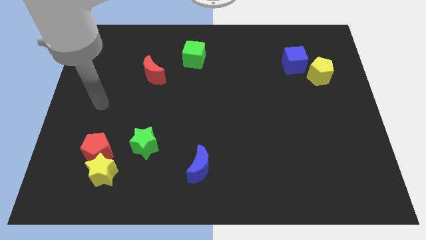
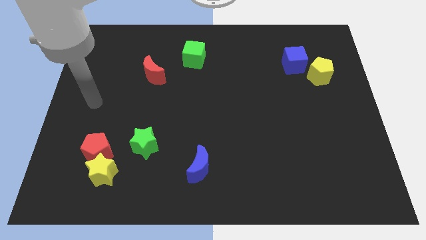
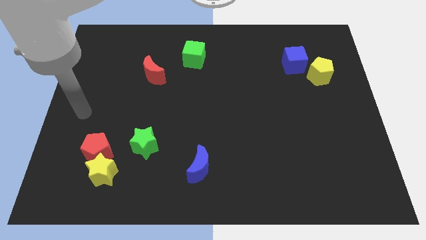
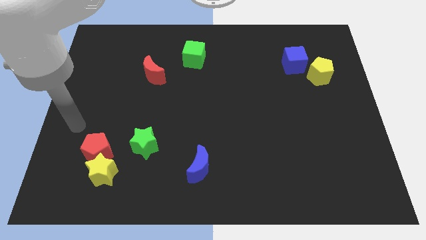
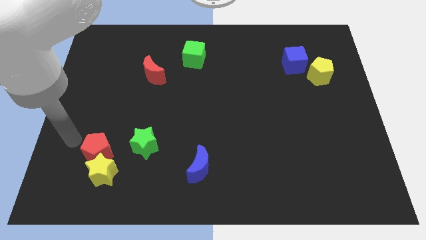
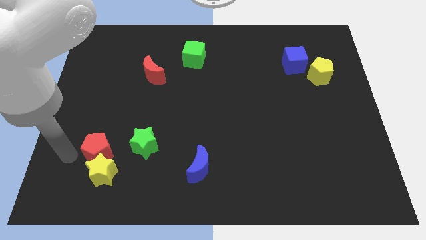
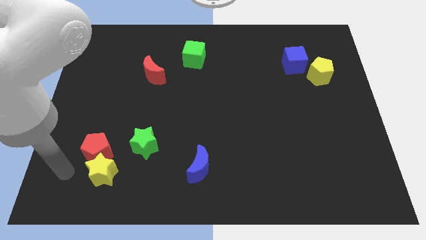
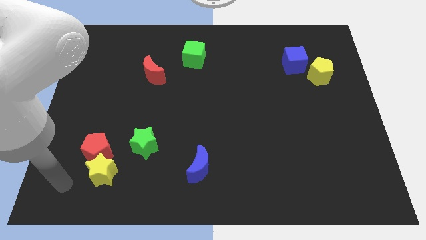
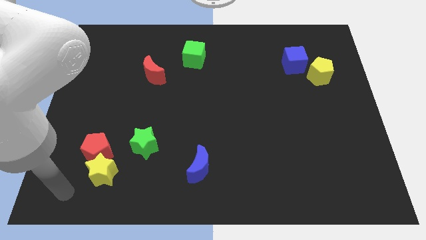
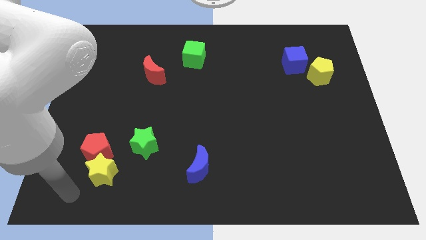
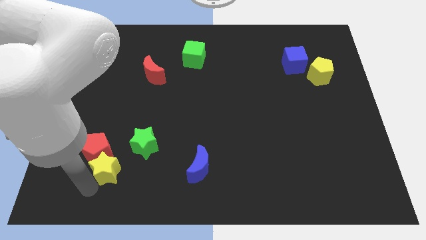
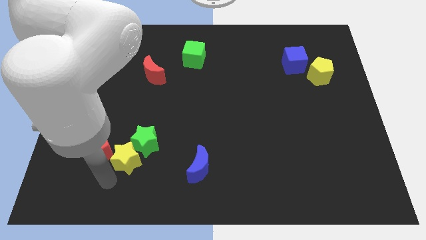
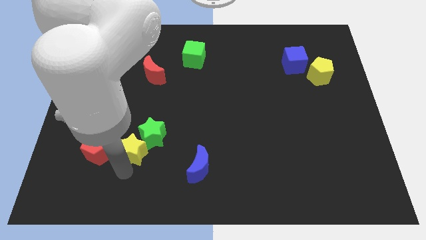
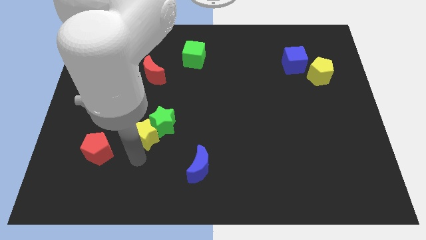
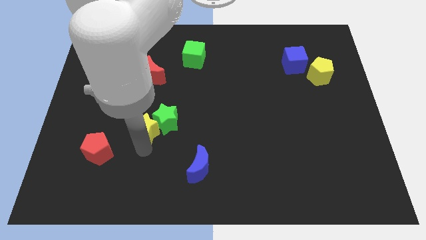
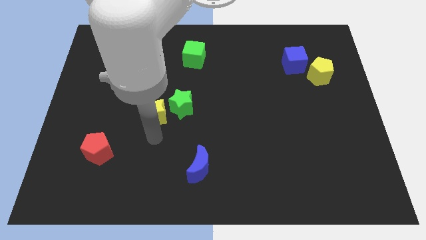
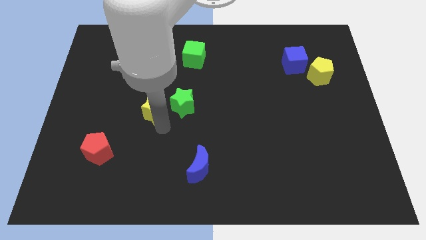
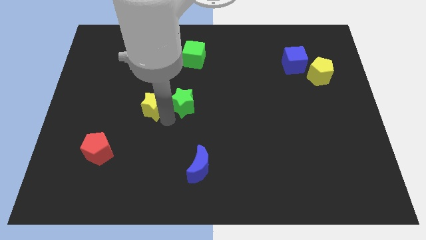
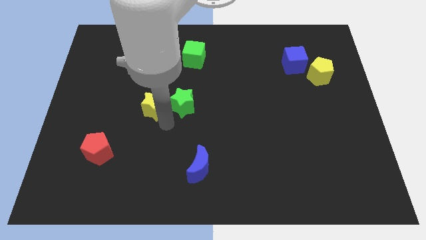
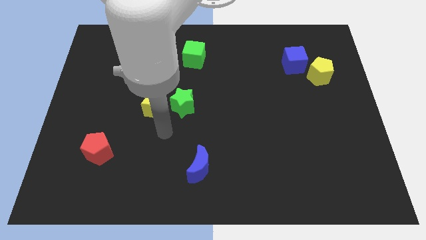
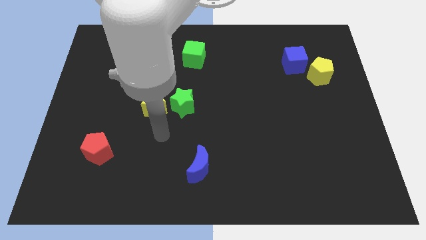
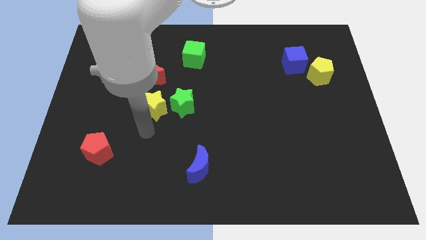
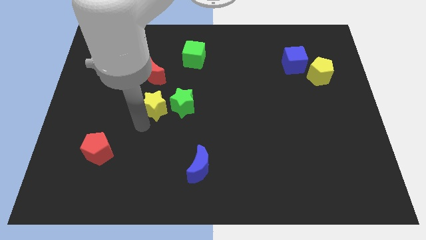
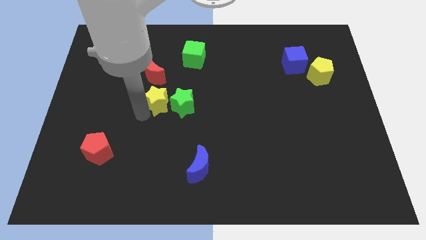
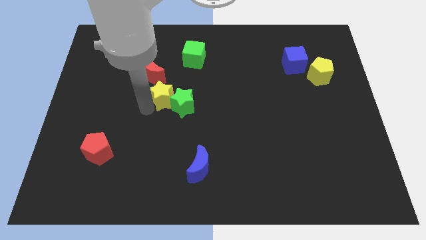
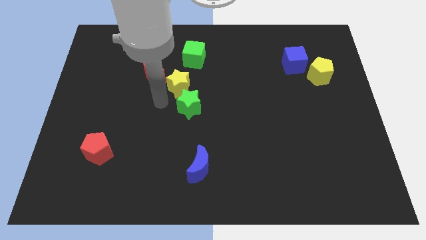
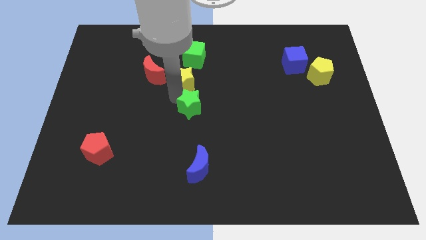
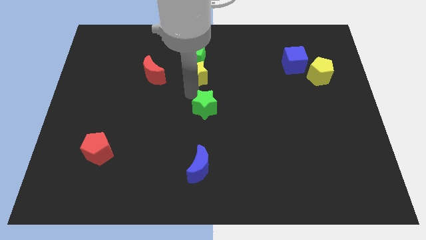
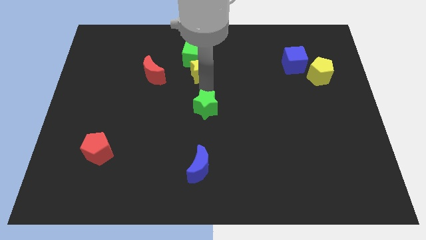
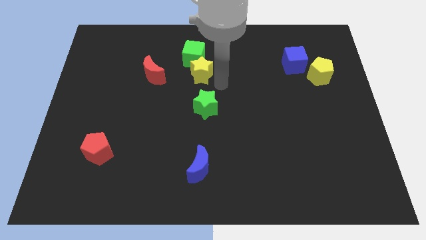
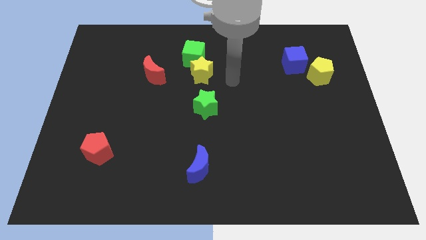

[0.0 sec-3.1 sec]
push the yellow star into the green star and green cube

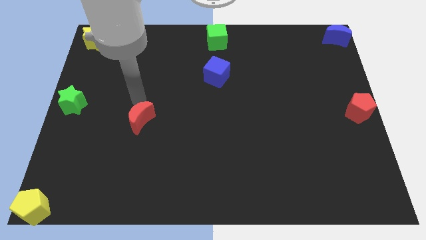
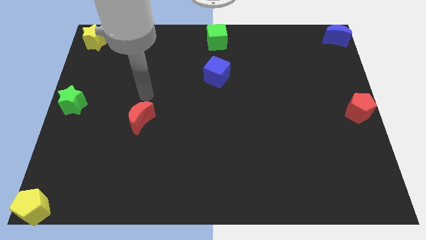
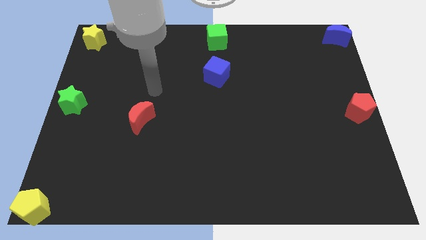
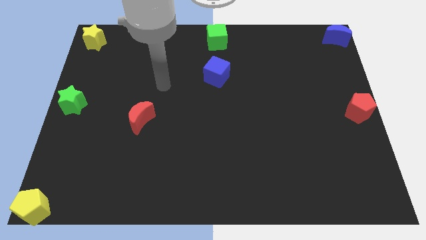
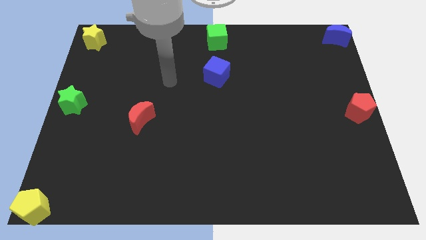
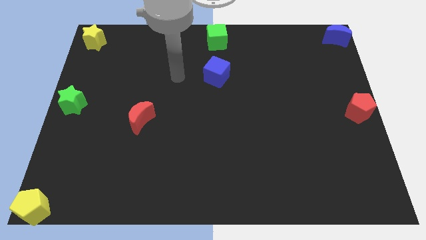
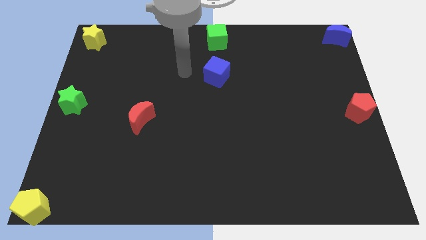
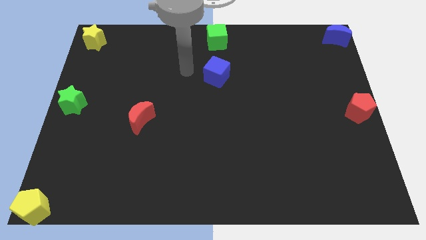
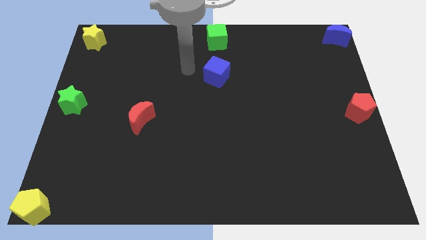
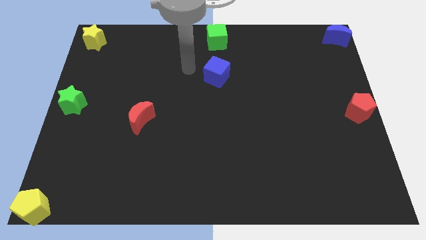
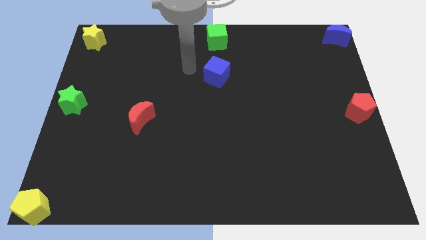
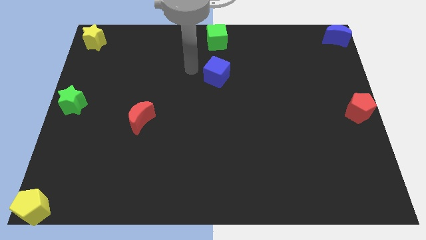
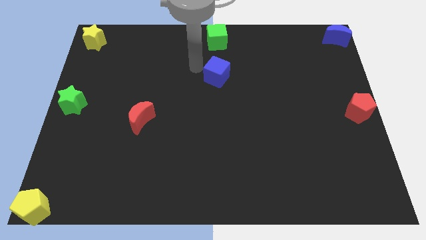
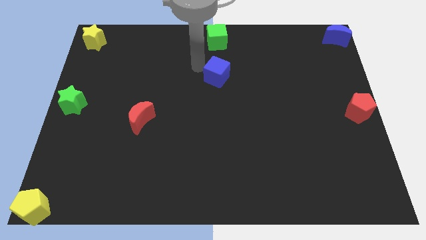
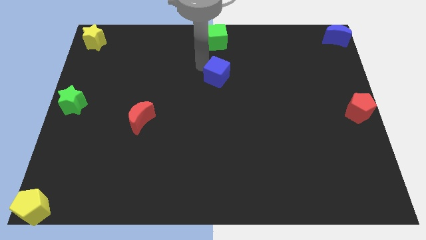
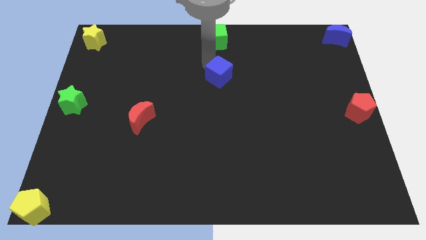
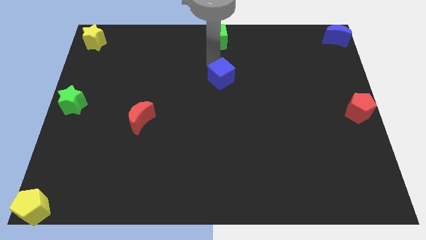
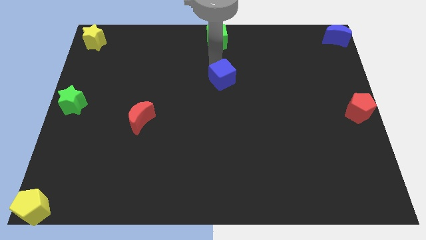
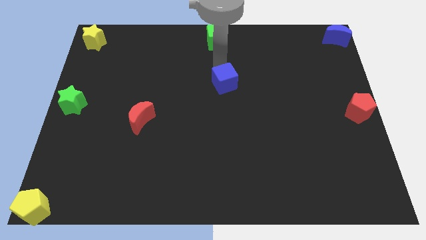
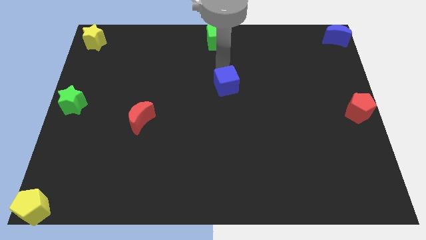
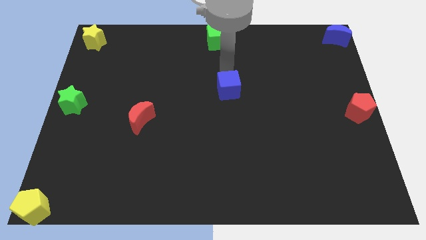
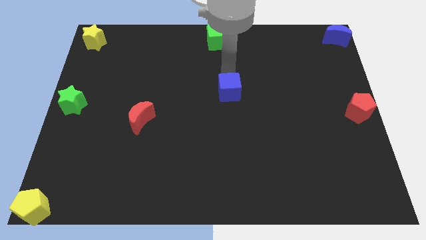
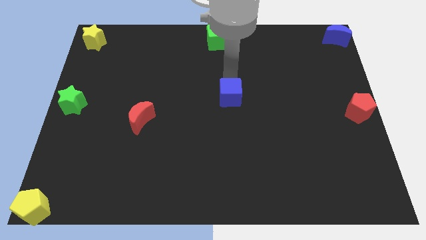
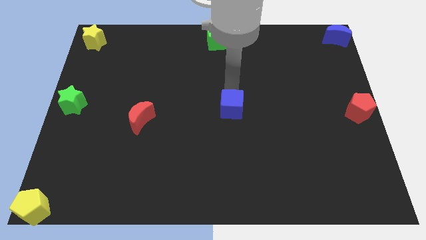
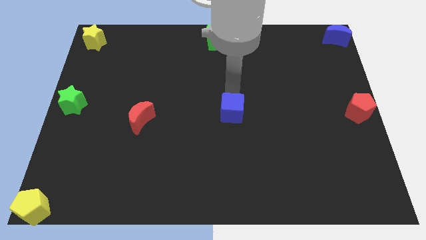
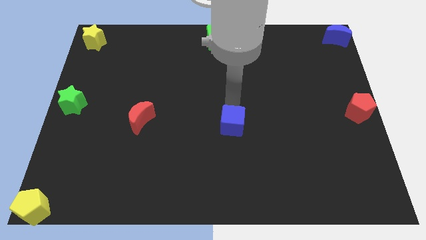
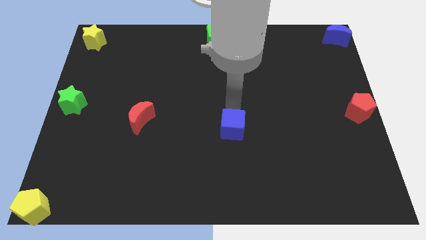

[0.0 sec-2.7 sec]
move the blue cube to the center of the board

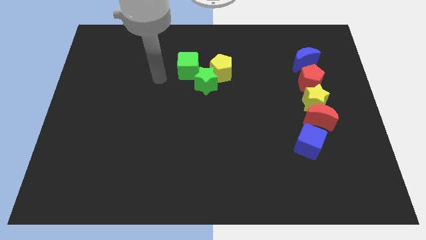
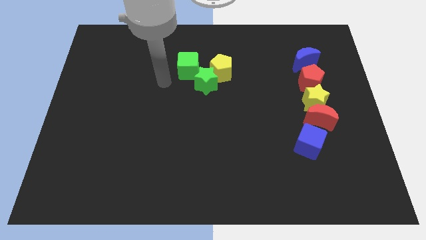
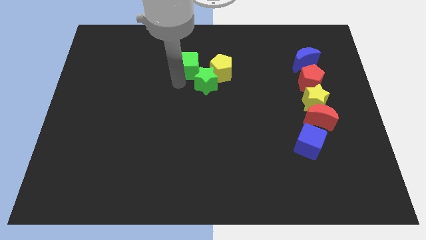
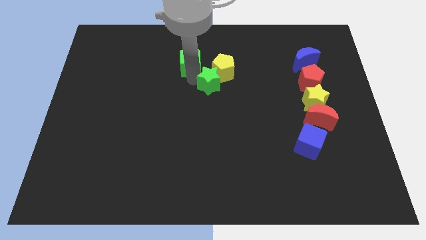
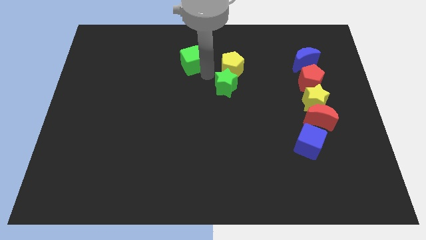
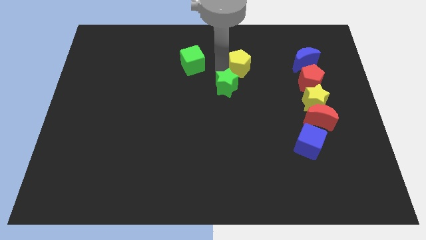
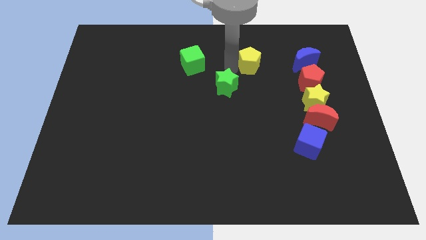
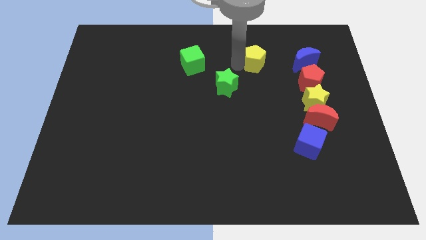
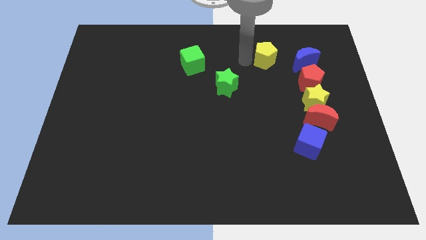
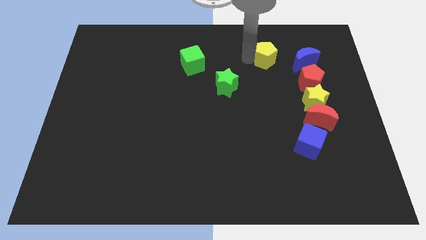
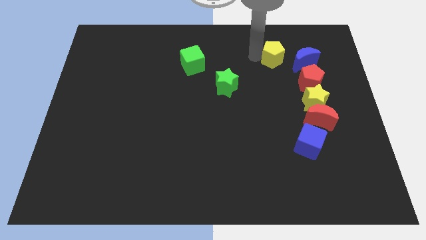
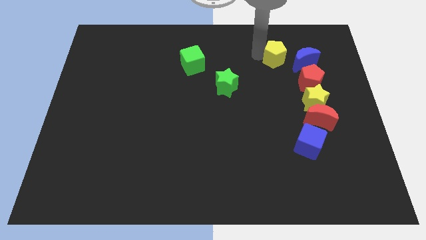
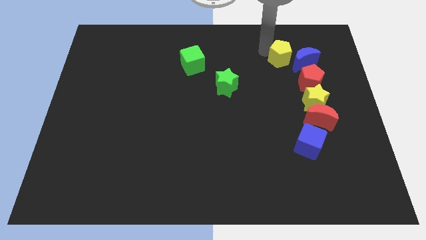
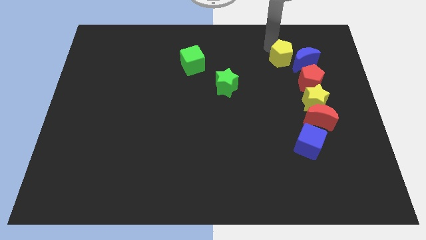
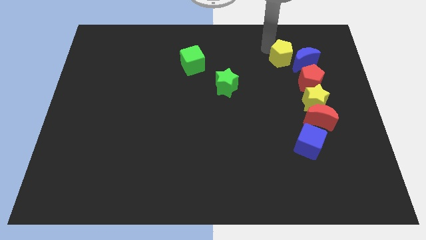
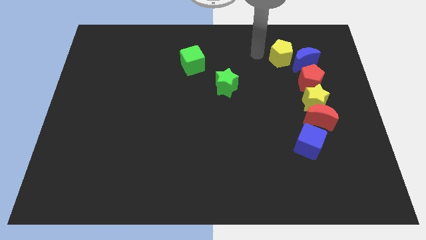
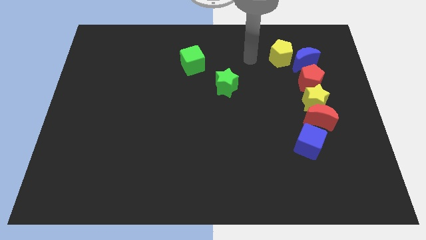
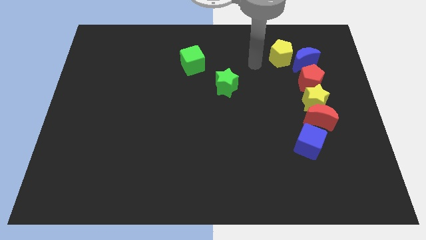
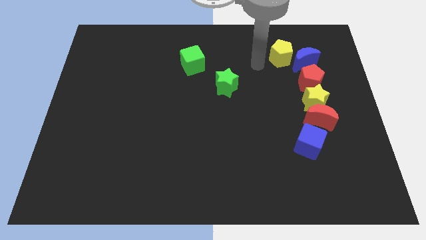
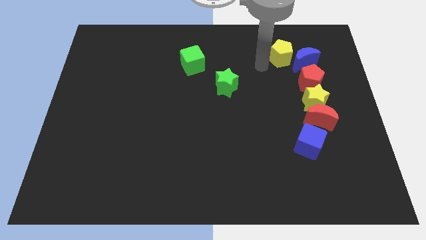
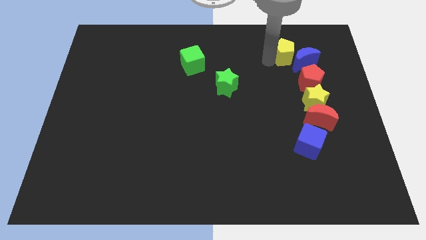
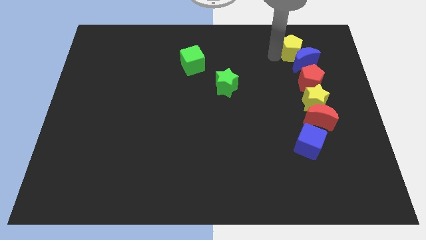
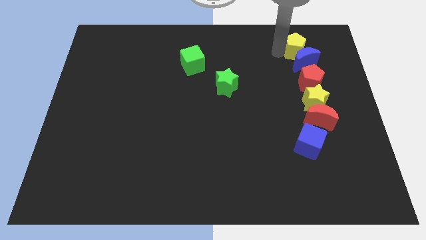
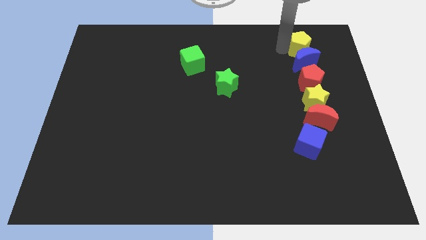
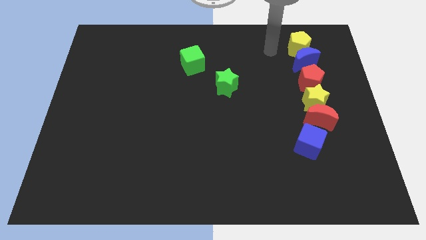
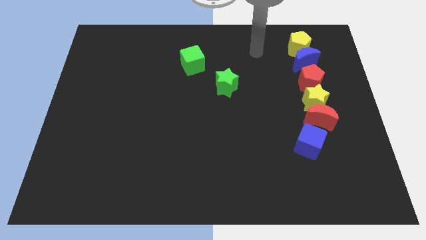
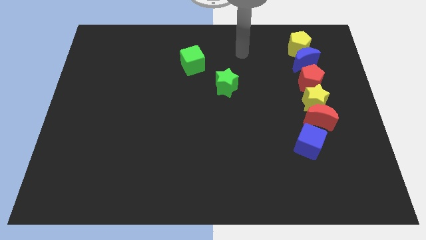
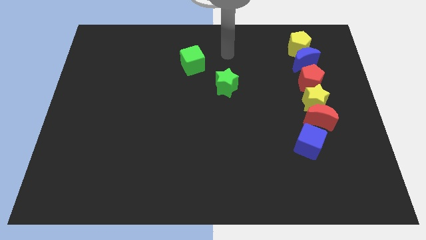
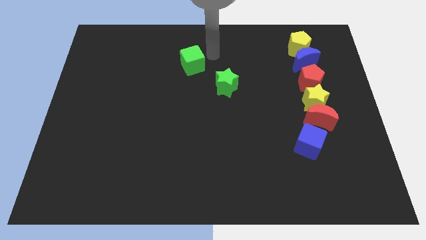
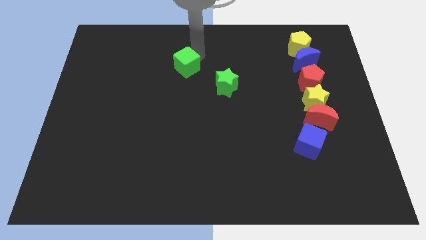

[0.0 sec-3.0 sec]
place the yellow pentagon above the blue crescent

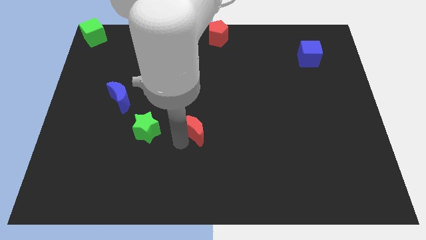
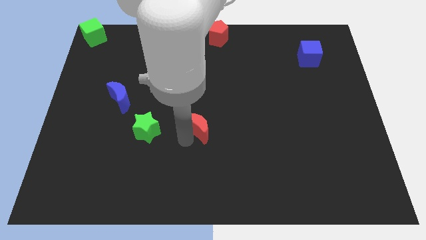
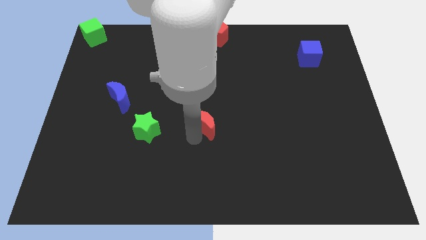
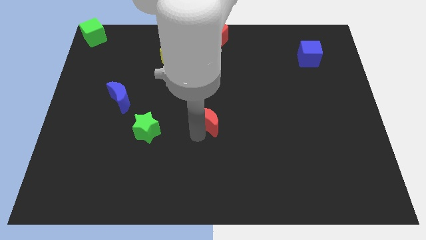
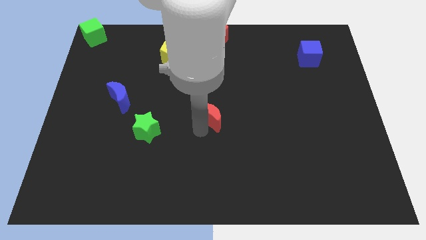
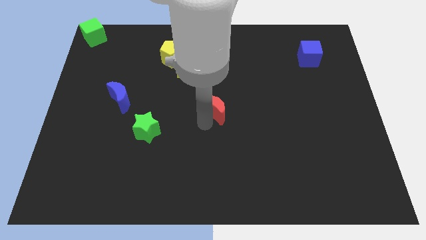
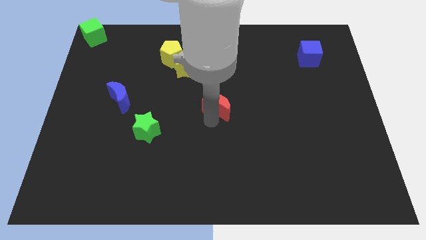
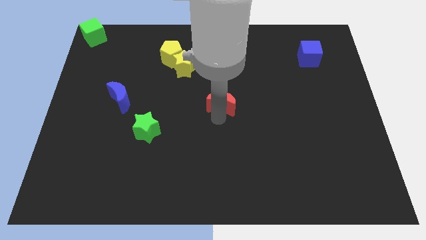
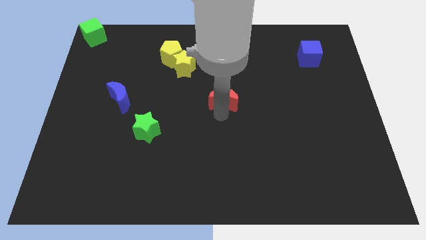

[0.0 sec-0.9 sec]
push the red moon towards the top side
